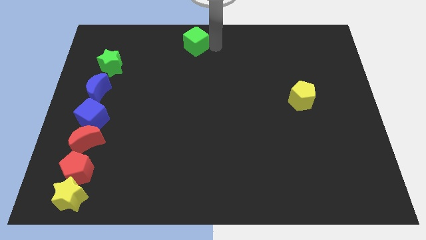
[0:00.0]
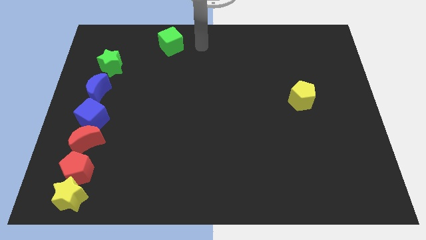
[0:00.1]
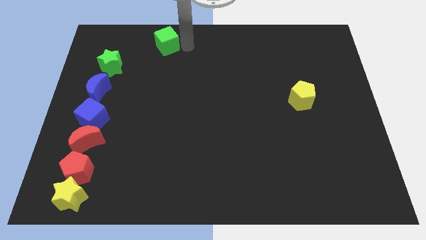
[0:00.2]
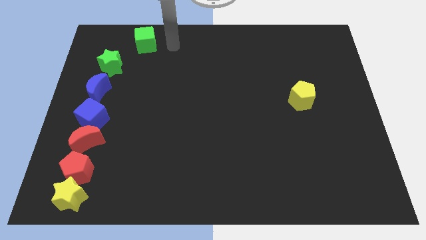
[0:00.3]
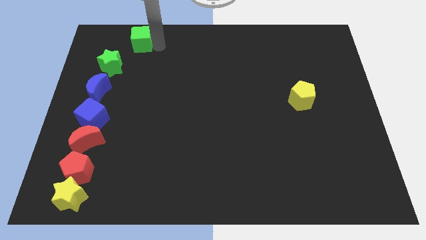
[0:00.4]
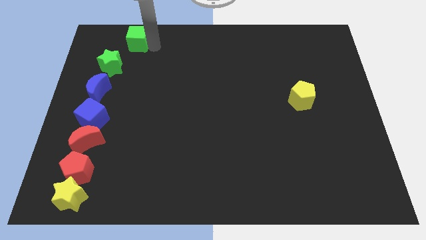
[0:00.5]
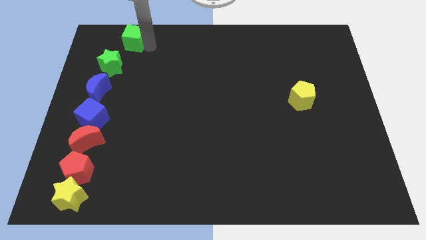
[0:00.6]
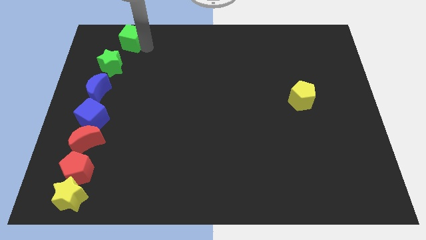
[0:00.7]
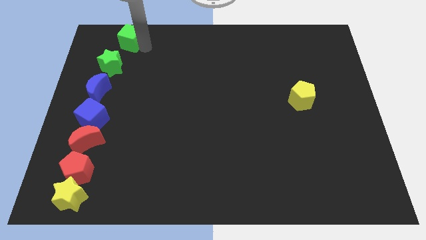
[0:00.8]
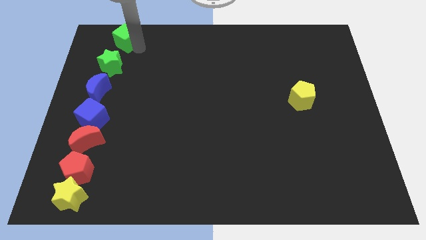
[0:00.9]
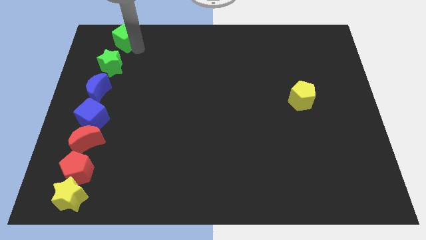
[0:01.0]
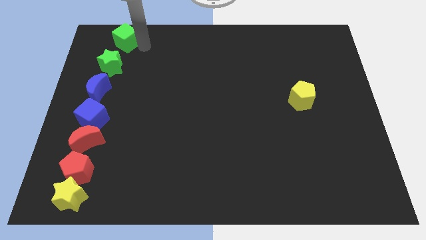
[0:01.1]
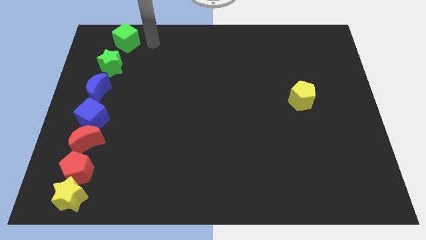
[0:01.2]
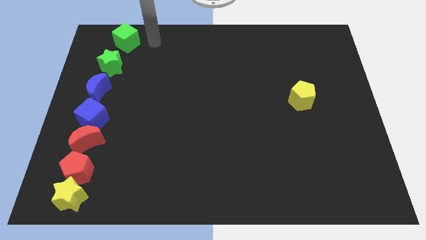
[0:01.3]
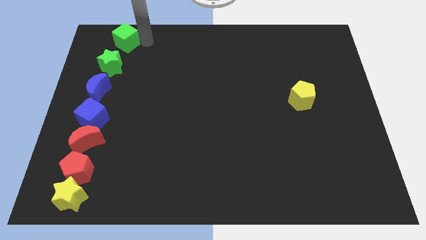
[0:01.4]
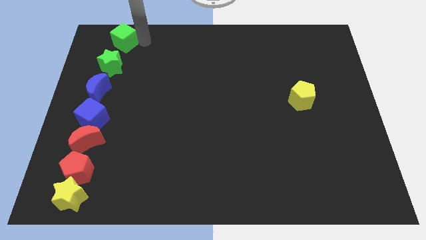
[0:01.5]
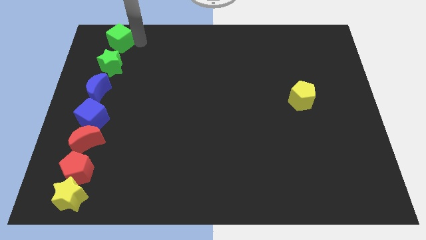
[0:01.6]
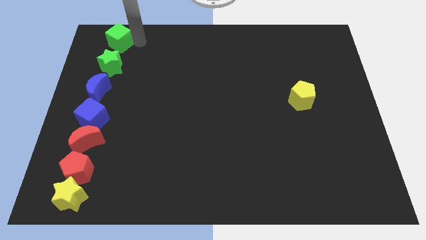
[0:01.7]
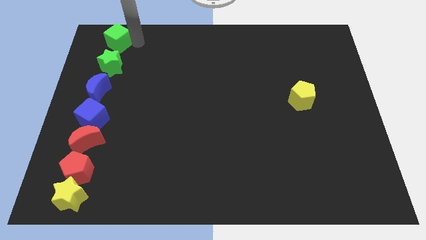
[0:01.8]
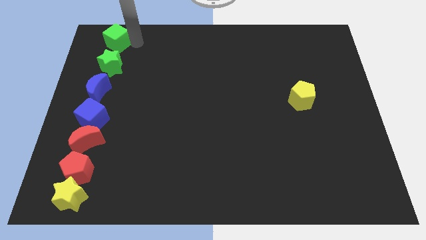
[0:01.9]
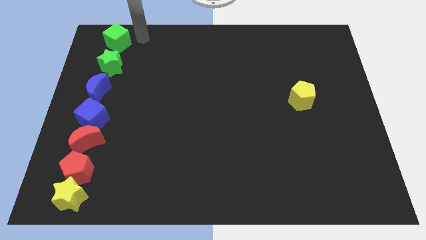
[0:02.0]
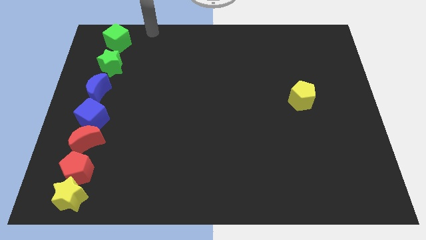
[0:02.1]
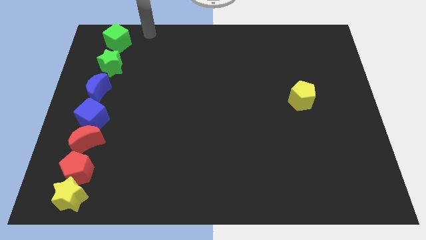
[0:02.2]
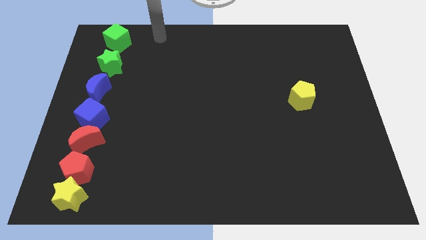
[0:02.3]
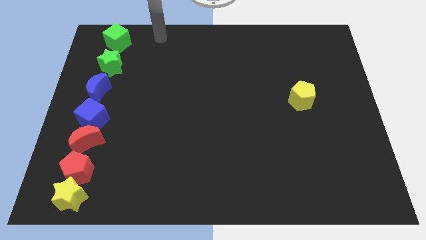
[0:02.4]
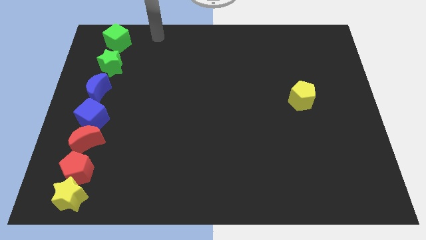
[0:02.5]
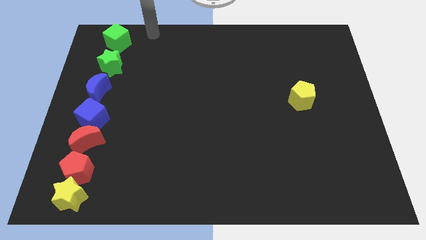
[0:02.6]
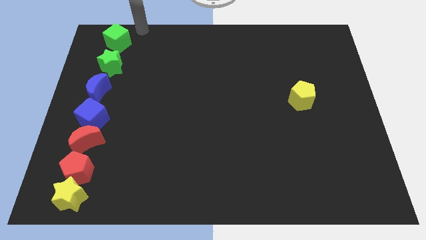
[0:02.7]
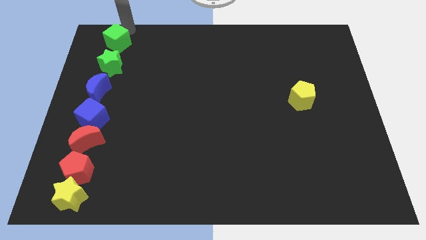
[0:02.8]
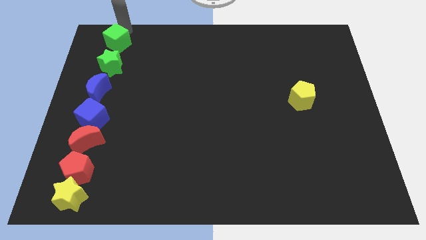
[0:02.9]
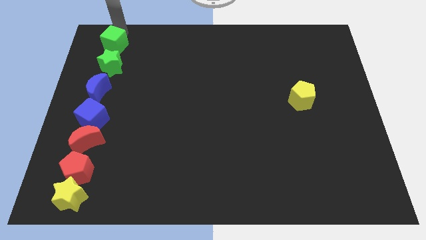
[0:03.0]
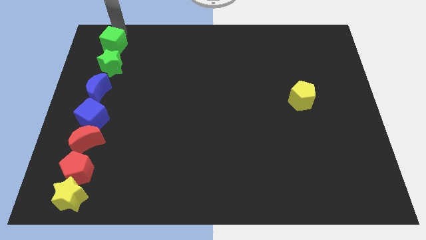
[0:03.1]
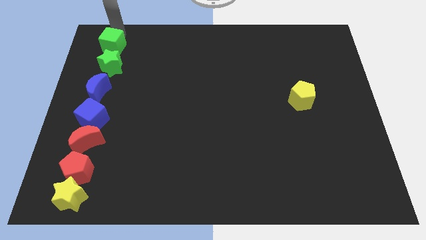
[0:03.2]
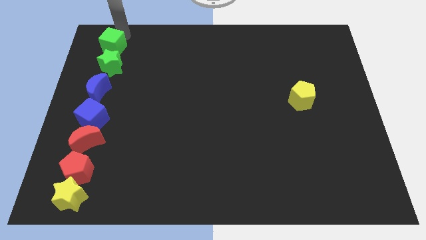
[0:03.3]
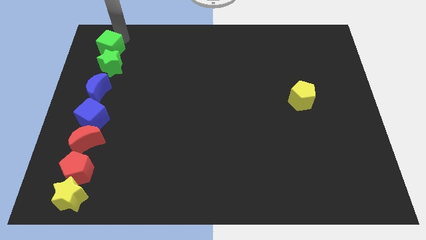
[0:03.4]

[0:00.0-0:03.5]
place green cube above the green star

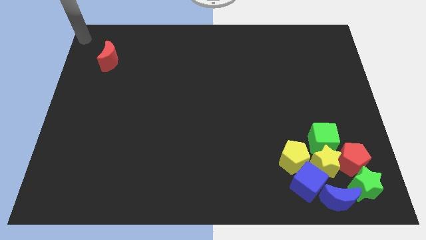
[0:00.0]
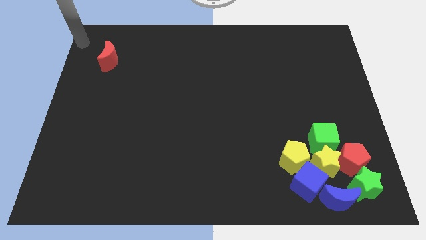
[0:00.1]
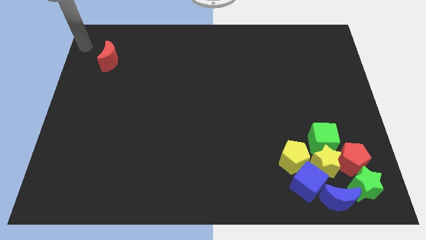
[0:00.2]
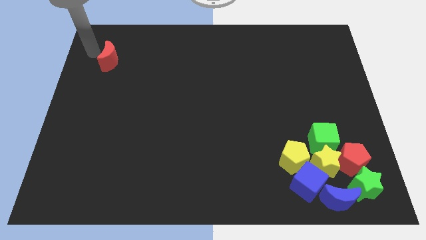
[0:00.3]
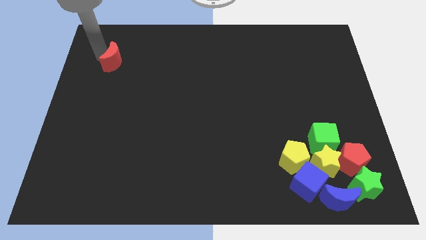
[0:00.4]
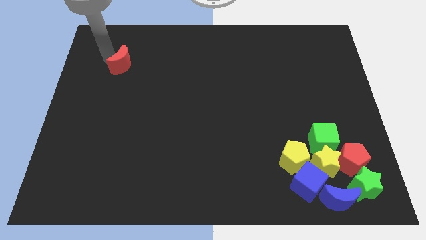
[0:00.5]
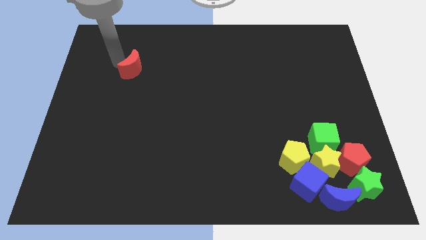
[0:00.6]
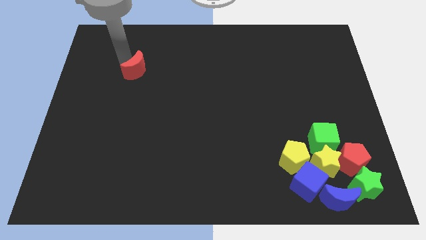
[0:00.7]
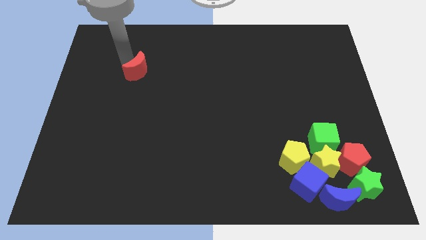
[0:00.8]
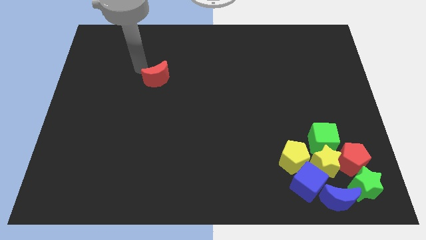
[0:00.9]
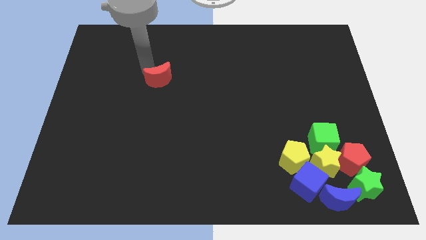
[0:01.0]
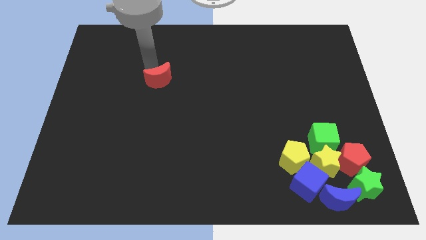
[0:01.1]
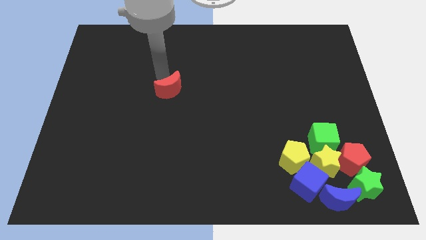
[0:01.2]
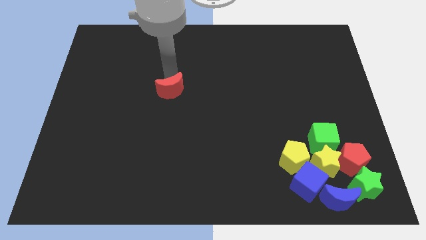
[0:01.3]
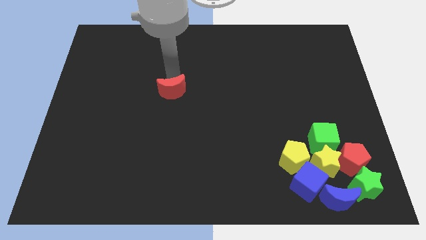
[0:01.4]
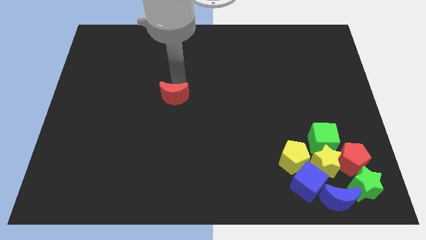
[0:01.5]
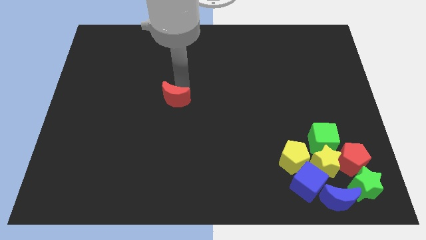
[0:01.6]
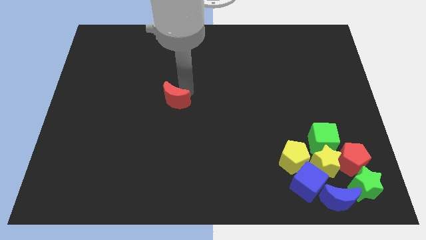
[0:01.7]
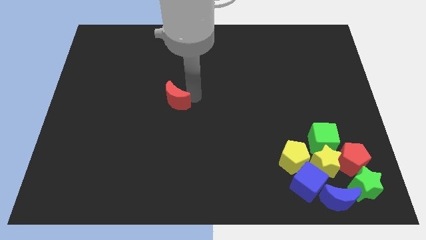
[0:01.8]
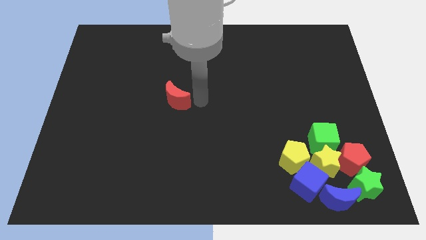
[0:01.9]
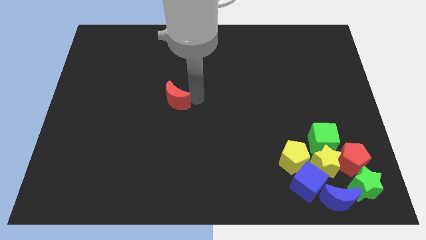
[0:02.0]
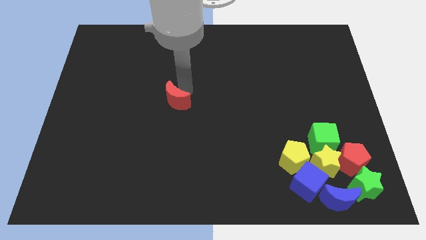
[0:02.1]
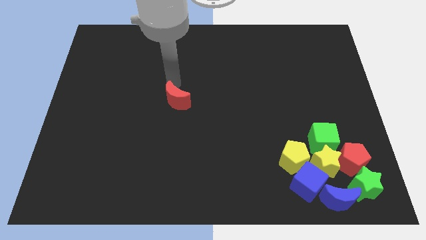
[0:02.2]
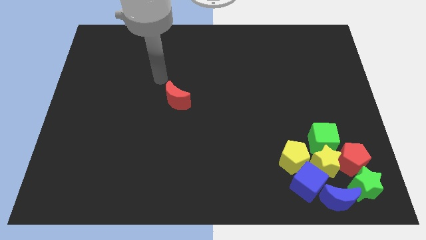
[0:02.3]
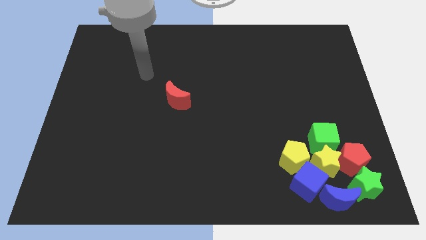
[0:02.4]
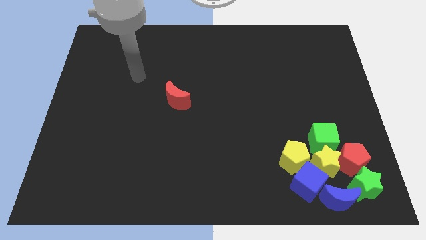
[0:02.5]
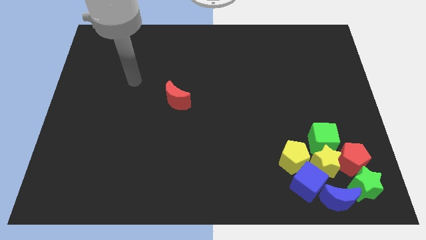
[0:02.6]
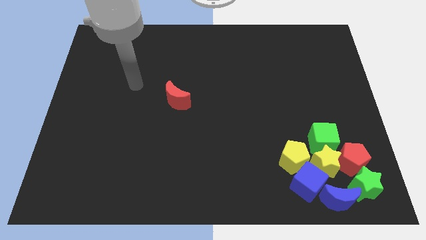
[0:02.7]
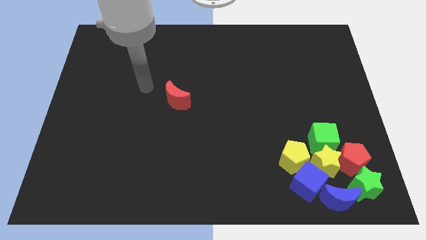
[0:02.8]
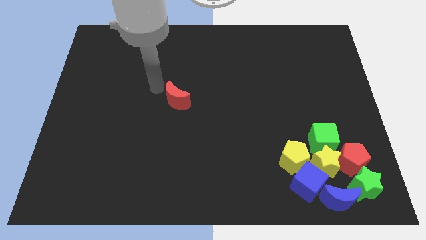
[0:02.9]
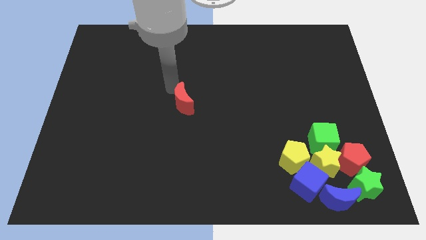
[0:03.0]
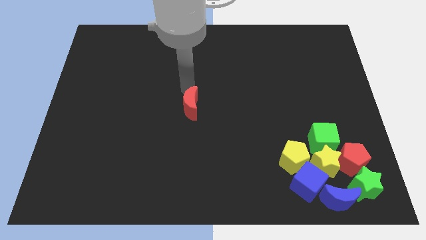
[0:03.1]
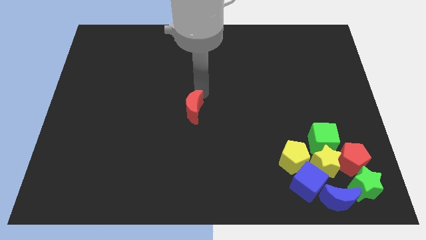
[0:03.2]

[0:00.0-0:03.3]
place the red crescent towards center

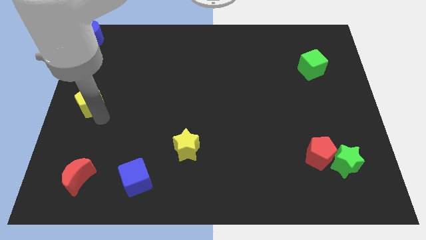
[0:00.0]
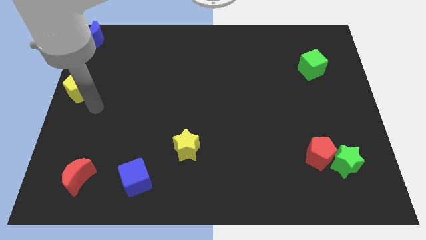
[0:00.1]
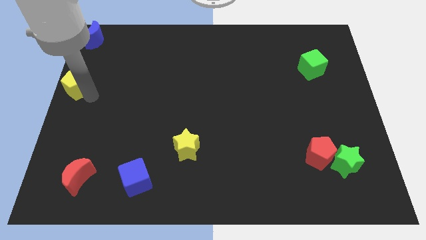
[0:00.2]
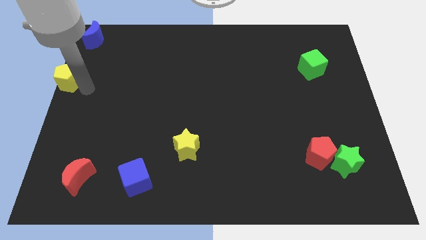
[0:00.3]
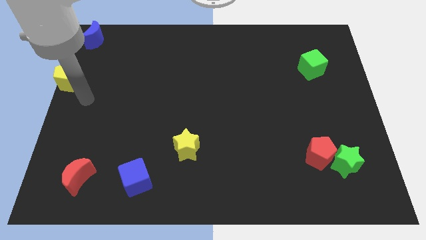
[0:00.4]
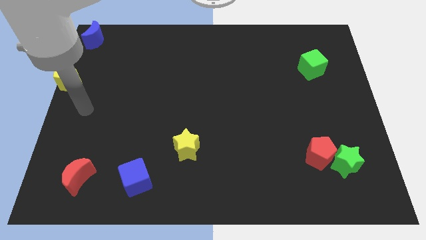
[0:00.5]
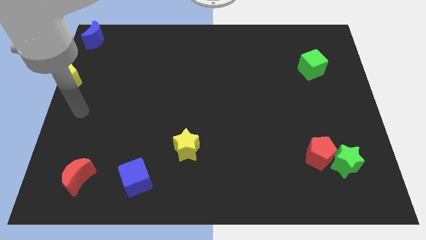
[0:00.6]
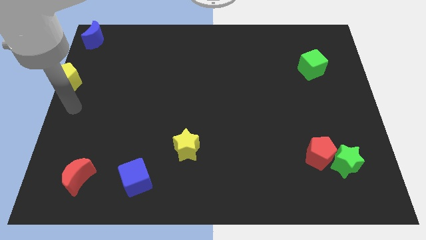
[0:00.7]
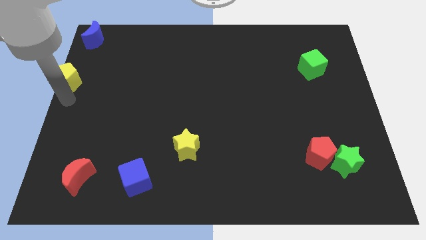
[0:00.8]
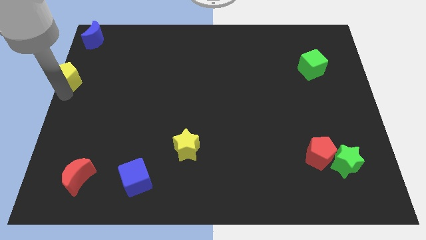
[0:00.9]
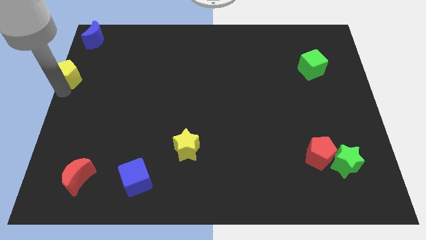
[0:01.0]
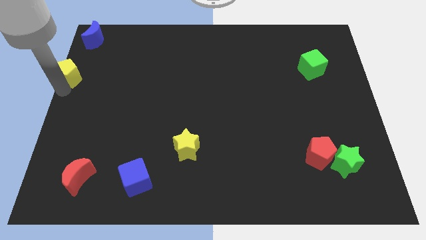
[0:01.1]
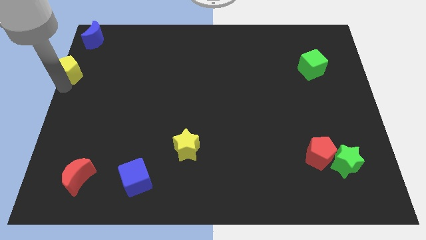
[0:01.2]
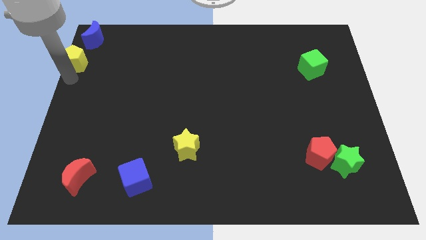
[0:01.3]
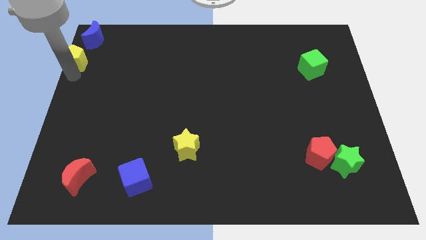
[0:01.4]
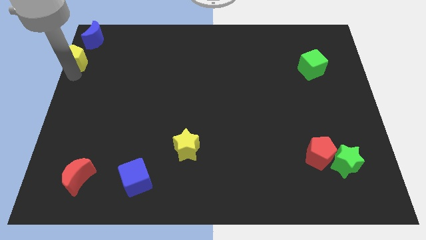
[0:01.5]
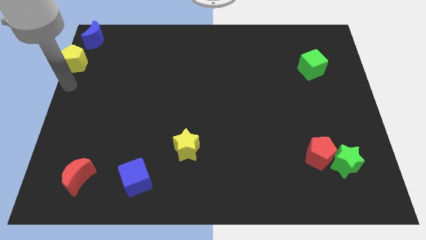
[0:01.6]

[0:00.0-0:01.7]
push the yellow pentagon towards the blue crescent to the top left of the board

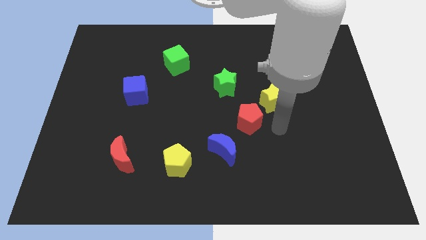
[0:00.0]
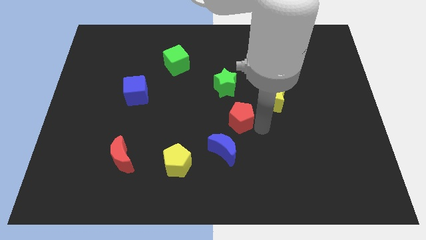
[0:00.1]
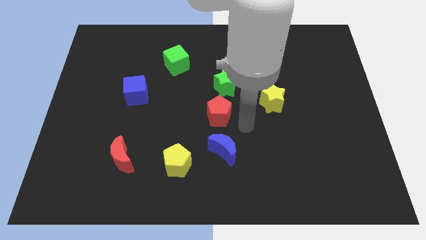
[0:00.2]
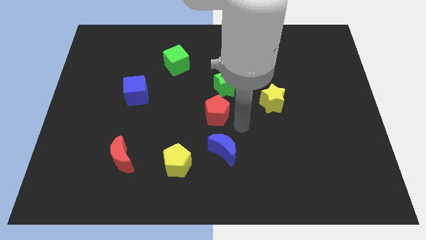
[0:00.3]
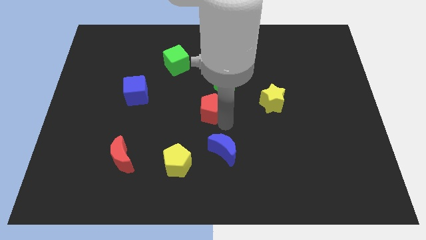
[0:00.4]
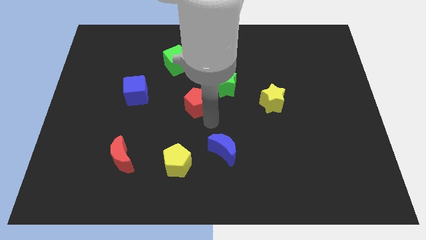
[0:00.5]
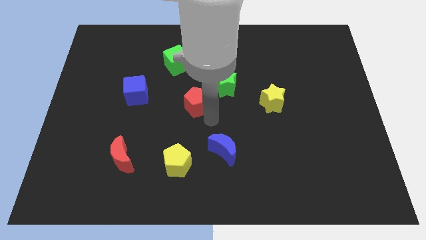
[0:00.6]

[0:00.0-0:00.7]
push the red pentagon to the bottom left of the green star
